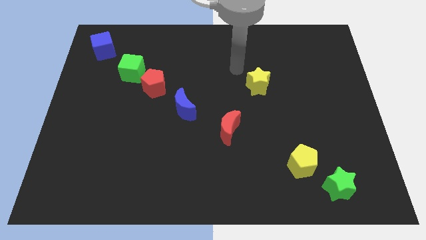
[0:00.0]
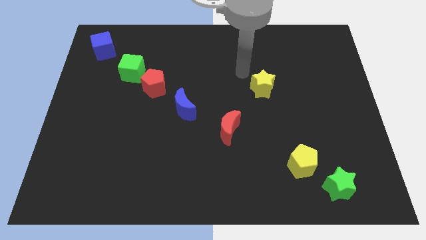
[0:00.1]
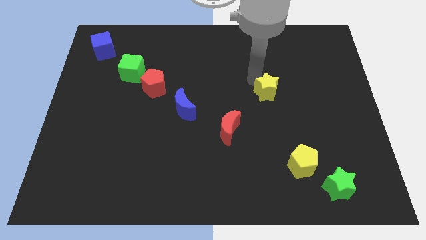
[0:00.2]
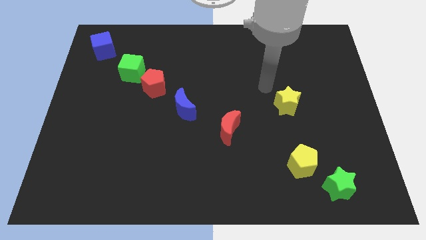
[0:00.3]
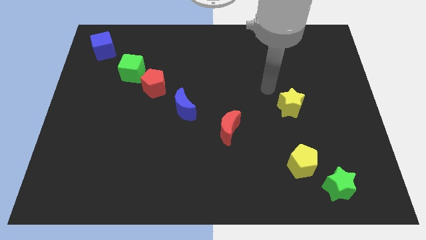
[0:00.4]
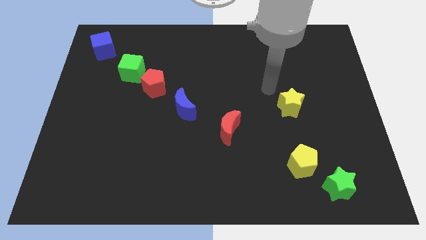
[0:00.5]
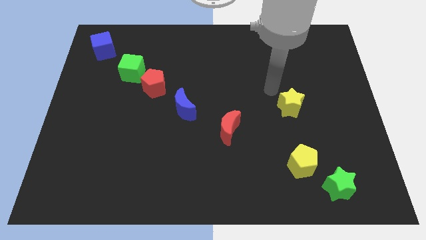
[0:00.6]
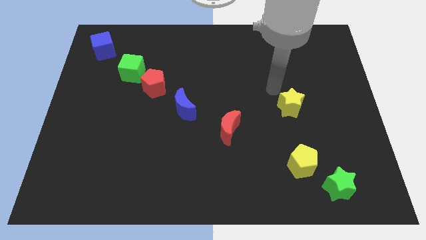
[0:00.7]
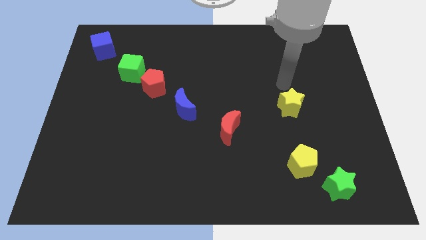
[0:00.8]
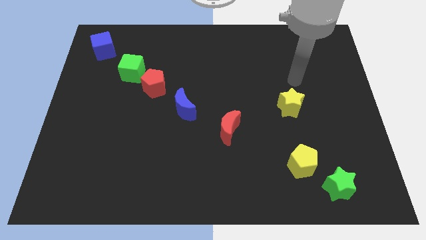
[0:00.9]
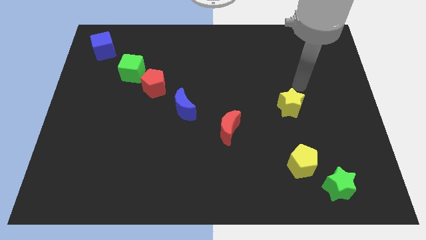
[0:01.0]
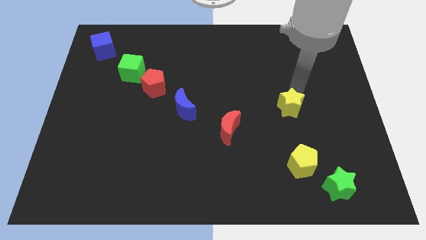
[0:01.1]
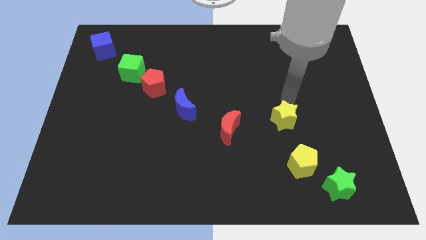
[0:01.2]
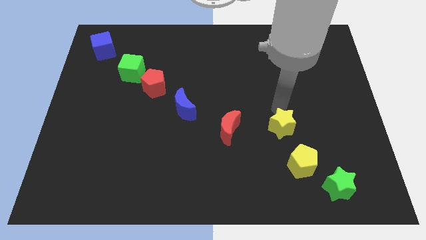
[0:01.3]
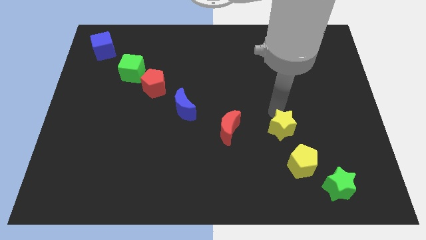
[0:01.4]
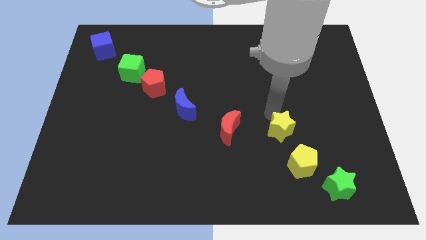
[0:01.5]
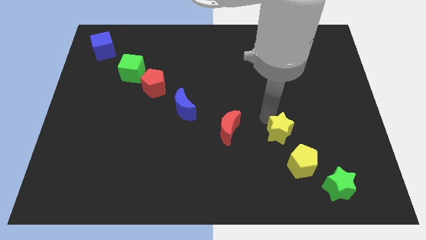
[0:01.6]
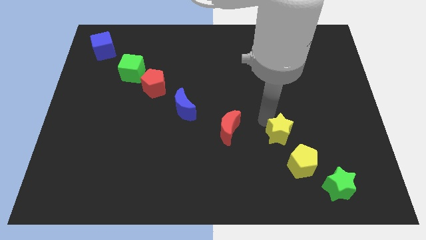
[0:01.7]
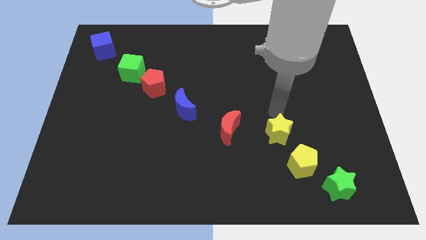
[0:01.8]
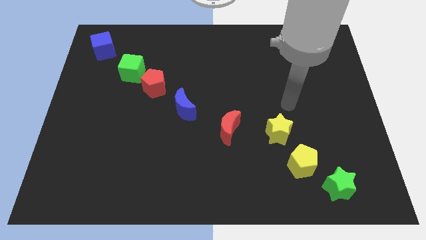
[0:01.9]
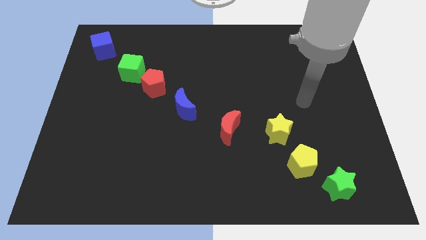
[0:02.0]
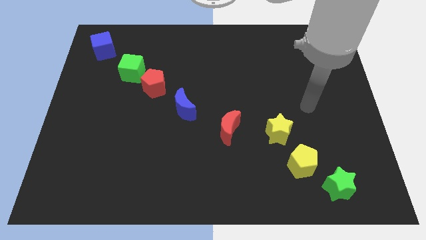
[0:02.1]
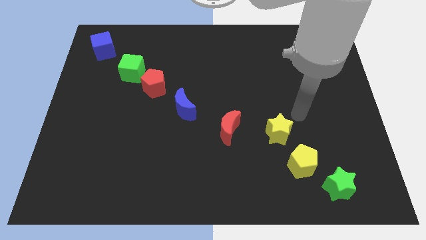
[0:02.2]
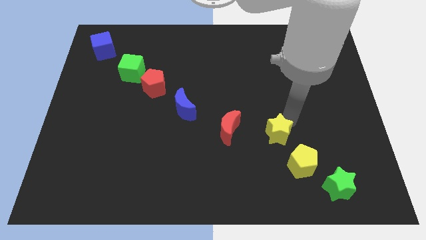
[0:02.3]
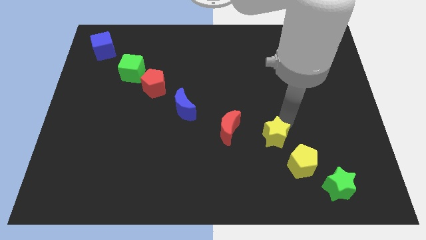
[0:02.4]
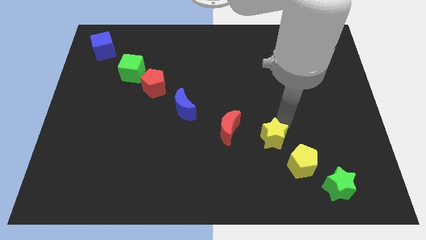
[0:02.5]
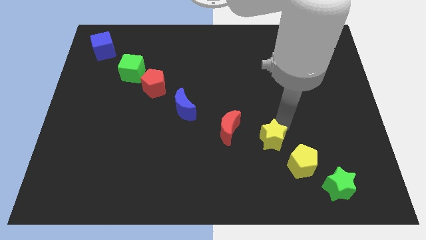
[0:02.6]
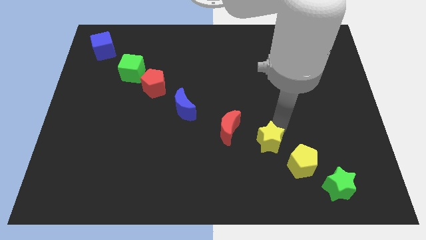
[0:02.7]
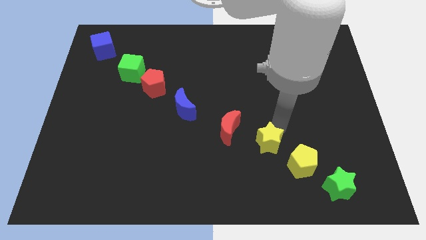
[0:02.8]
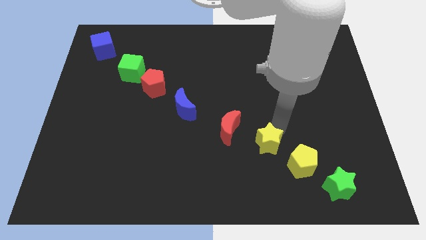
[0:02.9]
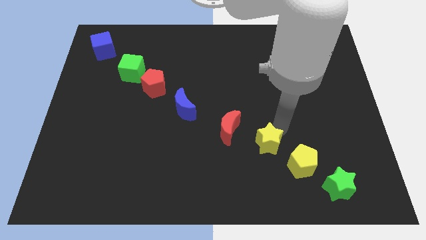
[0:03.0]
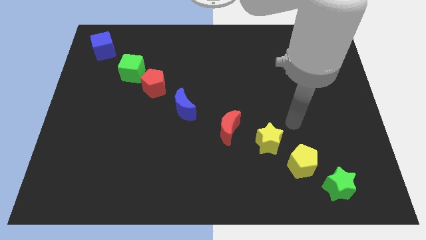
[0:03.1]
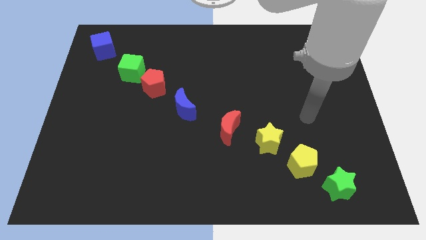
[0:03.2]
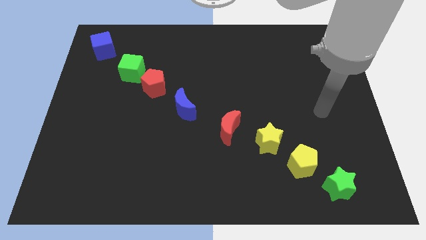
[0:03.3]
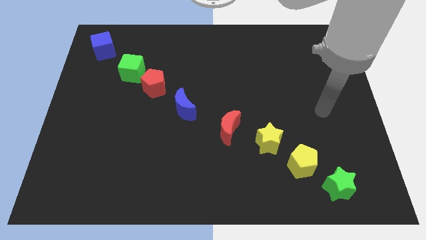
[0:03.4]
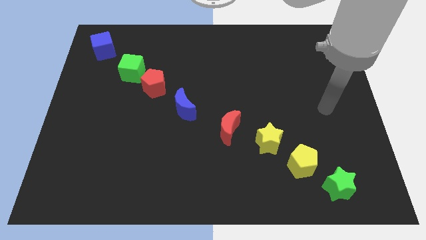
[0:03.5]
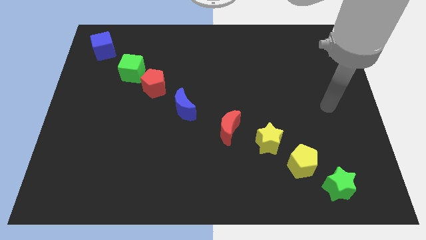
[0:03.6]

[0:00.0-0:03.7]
place the yellow star in between the yellow pentagon and the red crescent

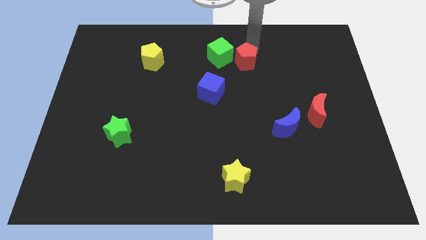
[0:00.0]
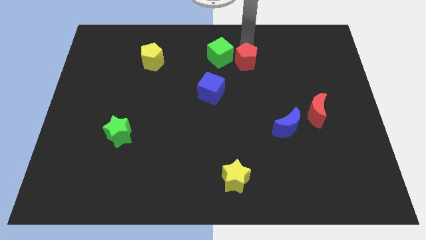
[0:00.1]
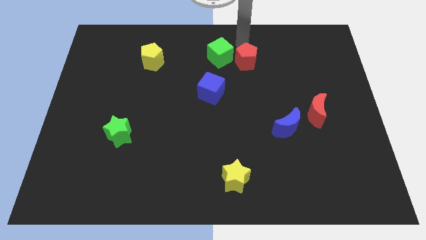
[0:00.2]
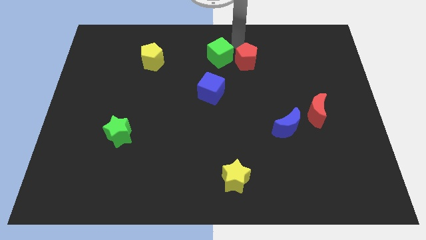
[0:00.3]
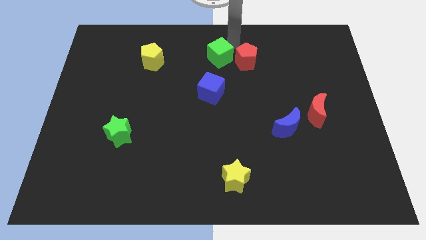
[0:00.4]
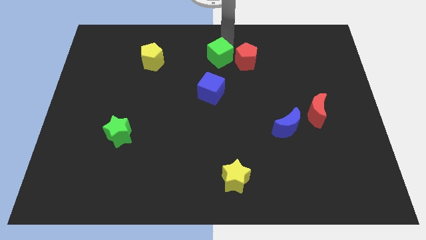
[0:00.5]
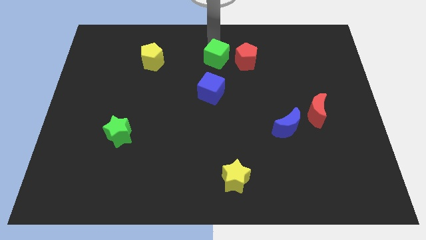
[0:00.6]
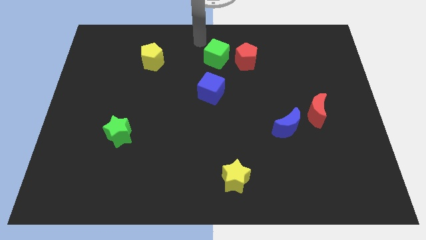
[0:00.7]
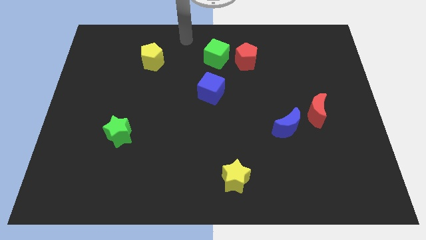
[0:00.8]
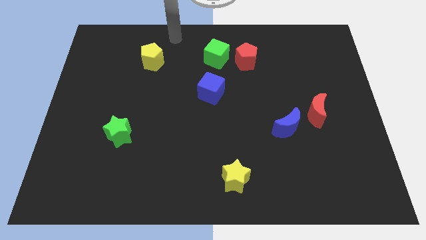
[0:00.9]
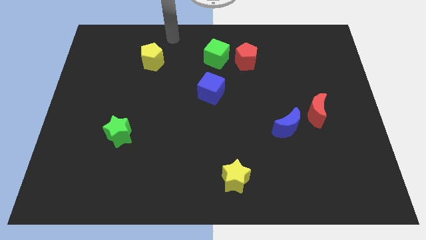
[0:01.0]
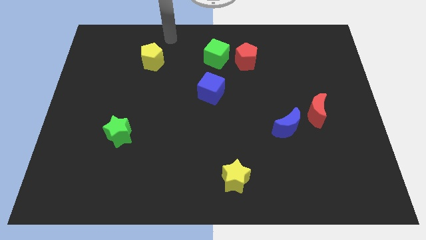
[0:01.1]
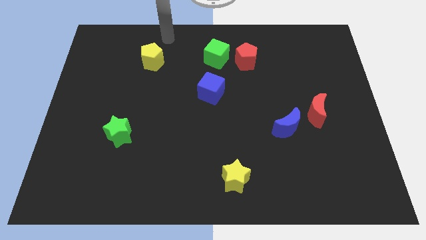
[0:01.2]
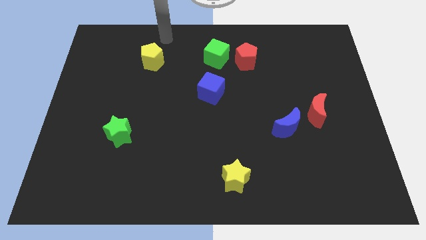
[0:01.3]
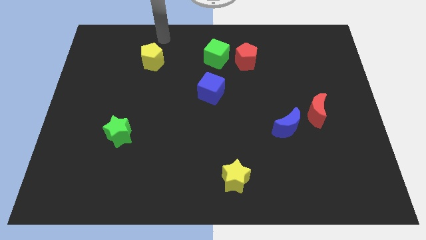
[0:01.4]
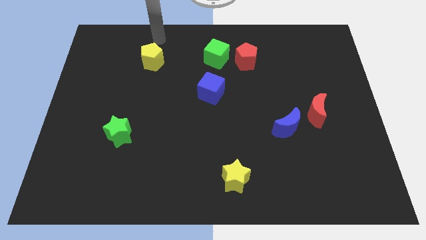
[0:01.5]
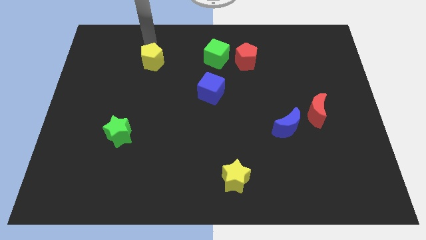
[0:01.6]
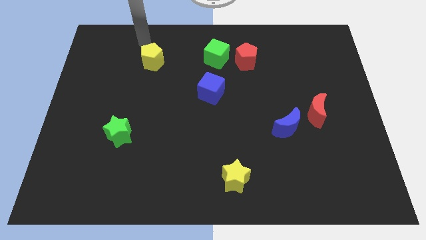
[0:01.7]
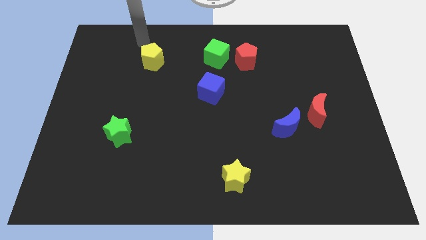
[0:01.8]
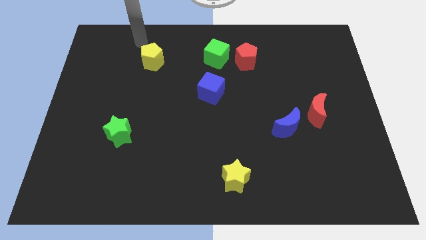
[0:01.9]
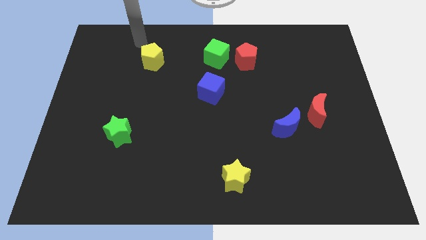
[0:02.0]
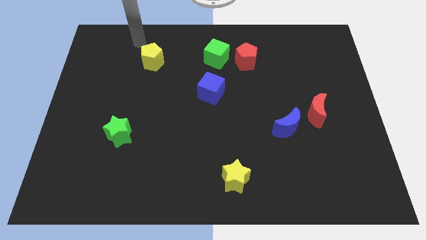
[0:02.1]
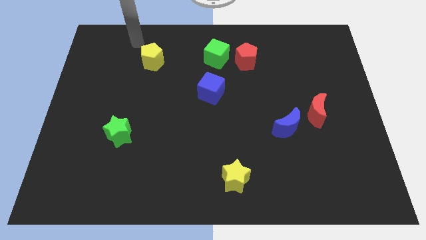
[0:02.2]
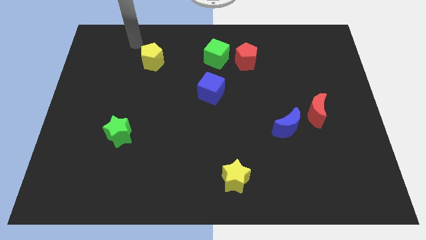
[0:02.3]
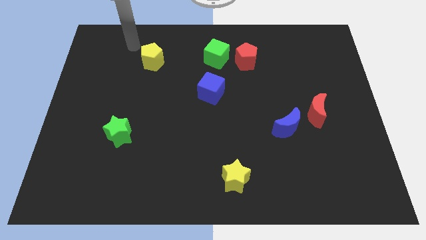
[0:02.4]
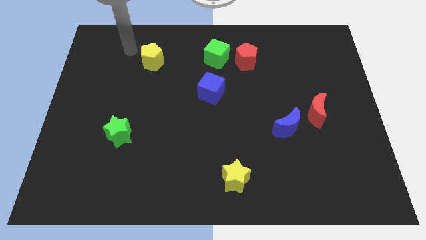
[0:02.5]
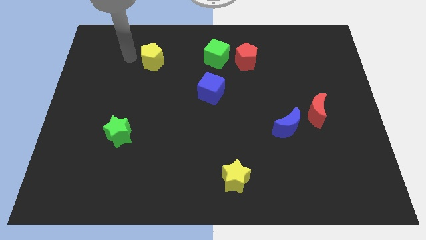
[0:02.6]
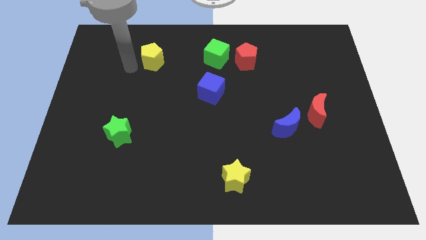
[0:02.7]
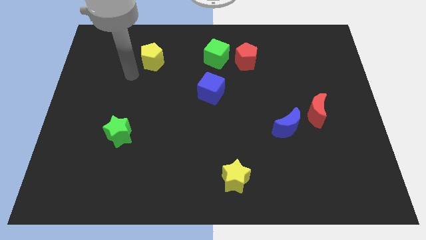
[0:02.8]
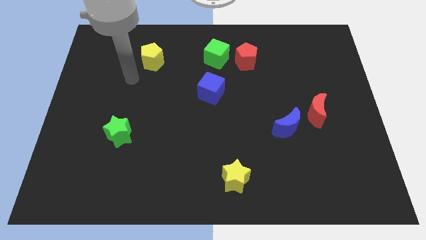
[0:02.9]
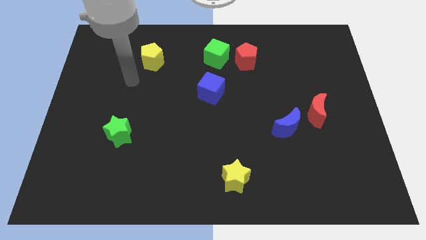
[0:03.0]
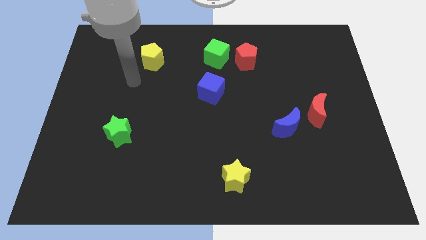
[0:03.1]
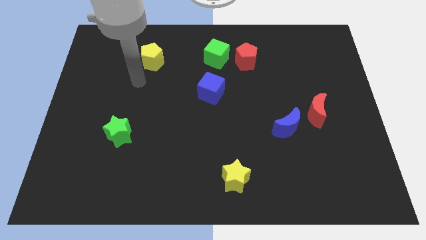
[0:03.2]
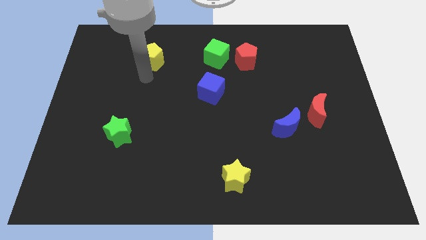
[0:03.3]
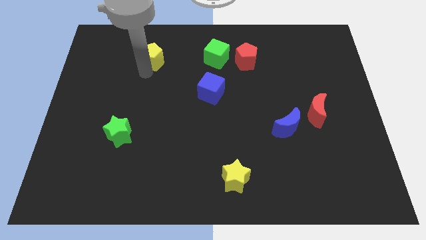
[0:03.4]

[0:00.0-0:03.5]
place your arm at the bottom side of the yellow pentagon

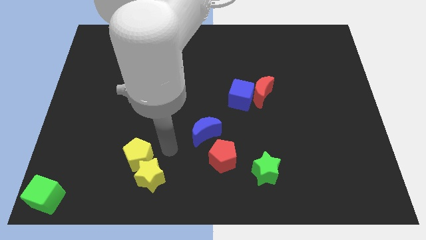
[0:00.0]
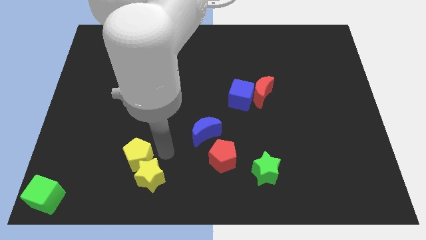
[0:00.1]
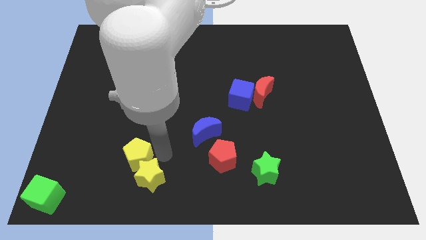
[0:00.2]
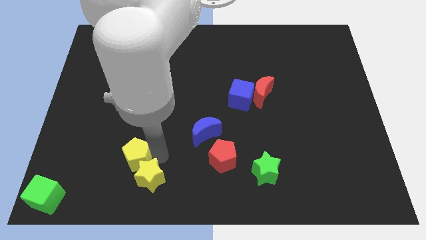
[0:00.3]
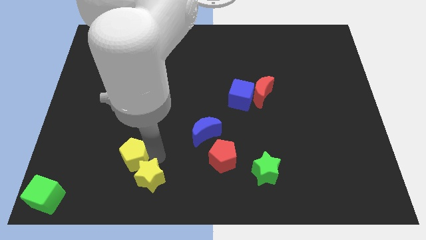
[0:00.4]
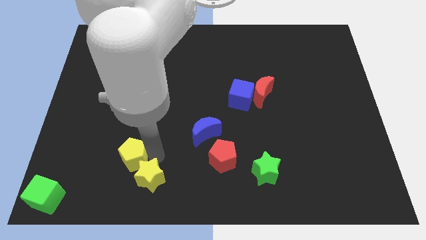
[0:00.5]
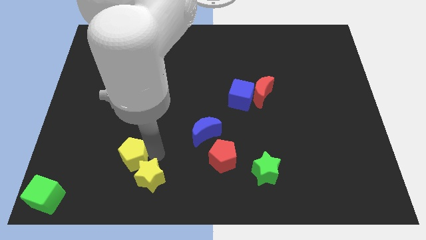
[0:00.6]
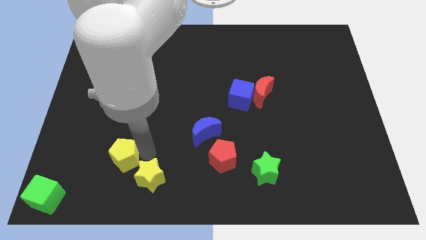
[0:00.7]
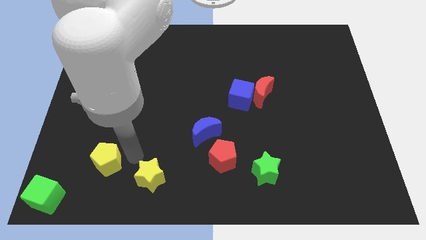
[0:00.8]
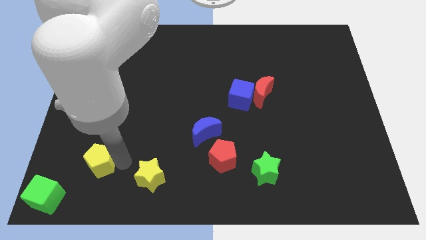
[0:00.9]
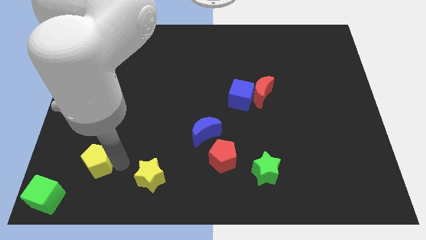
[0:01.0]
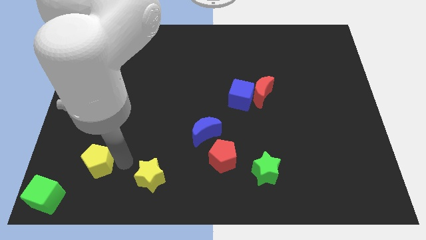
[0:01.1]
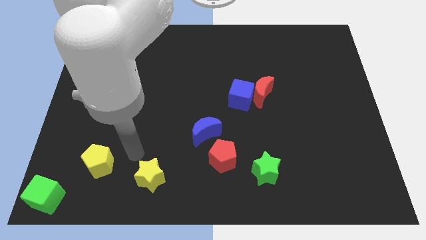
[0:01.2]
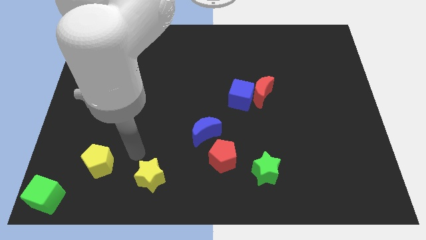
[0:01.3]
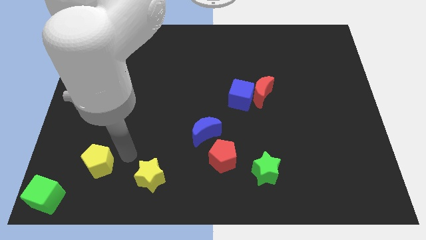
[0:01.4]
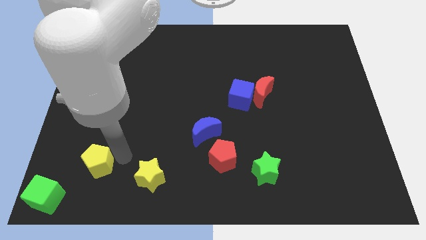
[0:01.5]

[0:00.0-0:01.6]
separate the yellow pentagon from the yellow star

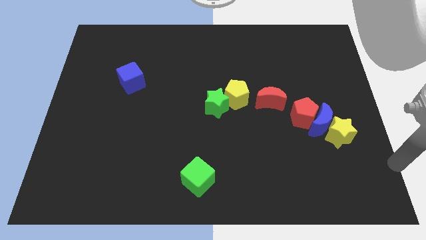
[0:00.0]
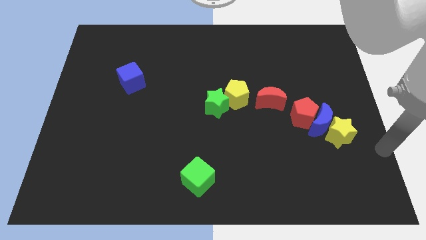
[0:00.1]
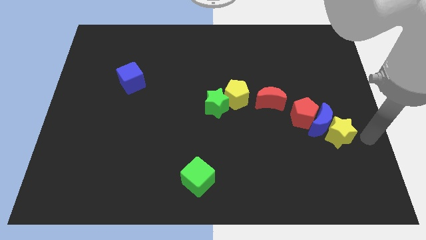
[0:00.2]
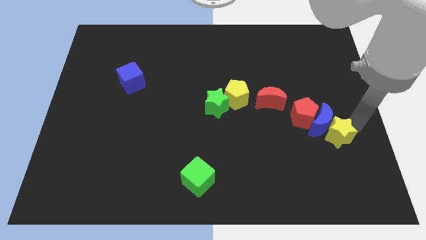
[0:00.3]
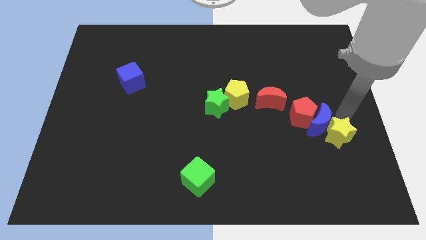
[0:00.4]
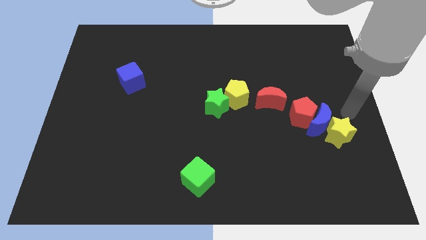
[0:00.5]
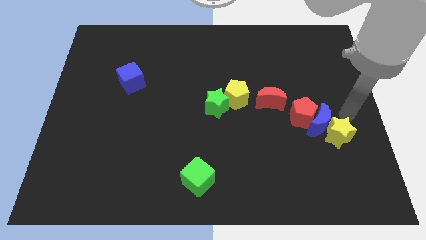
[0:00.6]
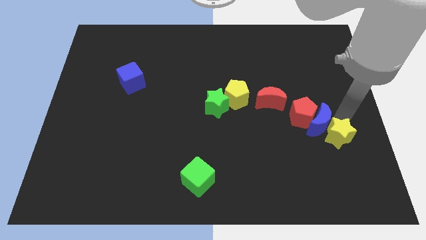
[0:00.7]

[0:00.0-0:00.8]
point your arm at the top of the yellow star
